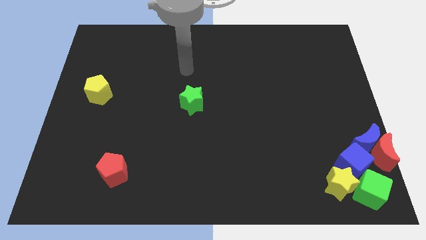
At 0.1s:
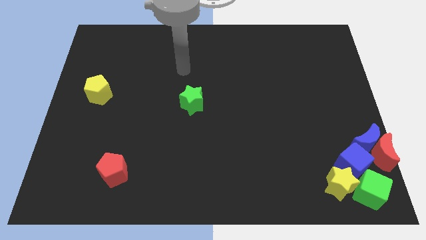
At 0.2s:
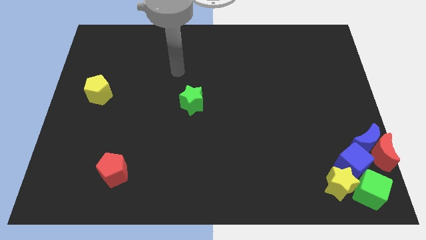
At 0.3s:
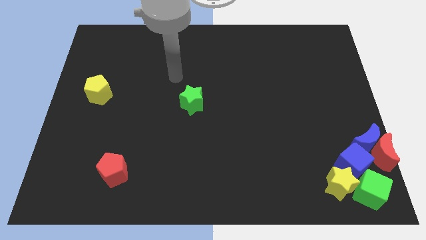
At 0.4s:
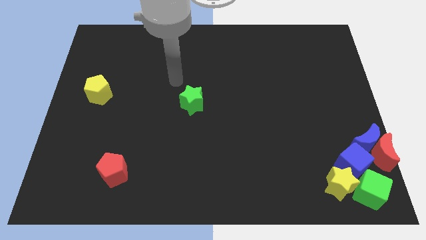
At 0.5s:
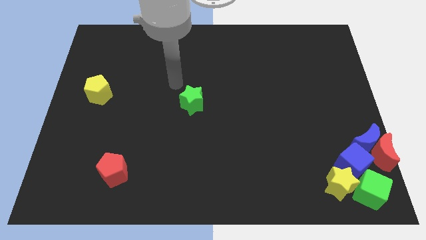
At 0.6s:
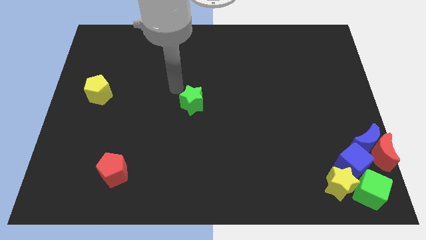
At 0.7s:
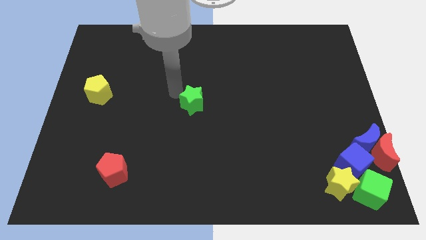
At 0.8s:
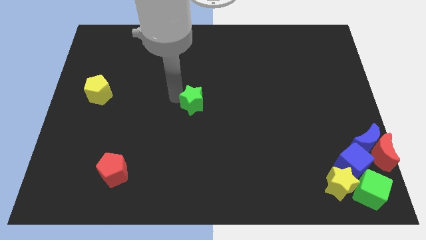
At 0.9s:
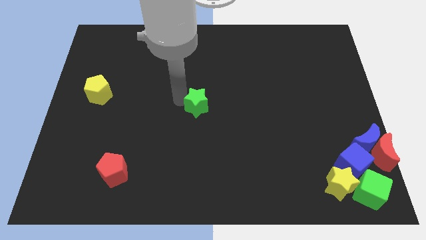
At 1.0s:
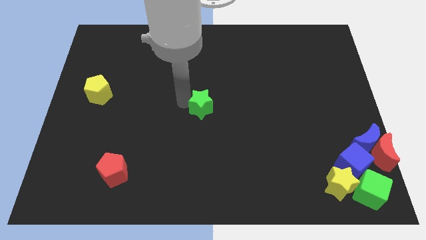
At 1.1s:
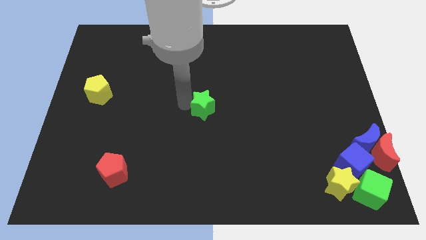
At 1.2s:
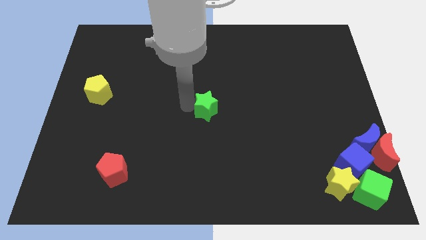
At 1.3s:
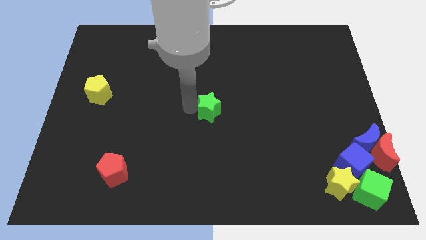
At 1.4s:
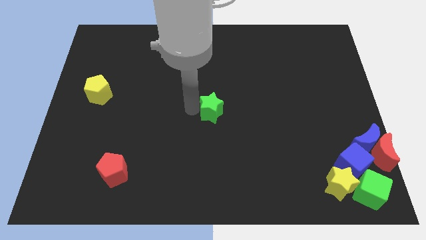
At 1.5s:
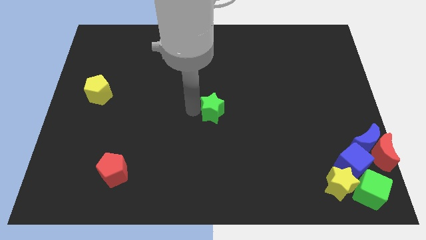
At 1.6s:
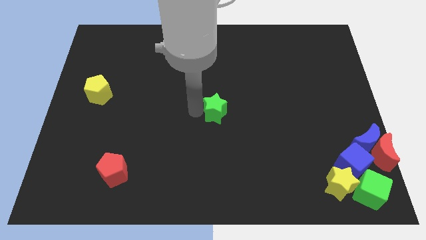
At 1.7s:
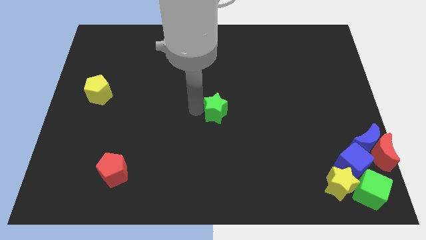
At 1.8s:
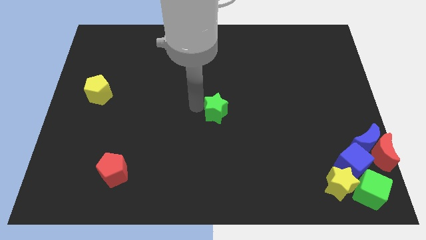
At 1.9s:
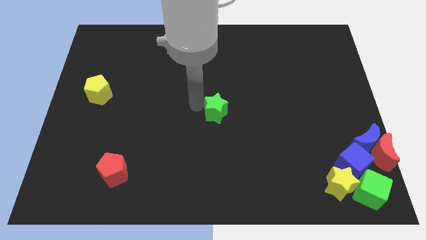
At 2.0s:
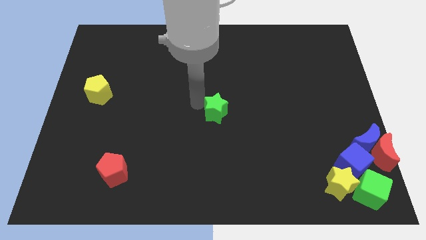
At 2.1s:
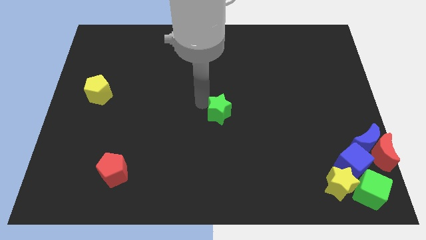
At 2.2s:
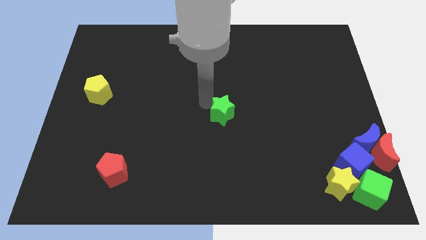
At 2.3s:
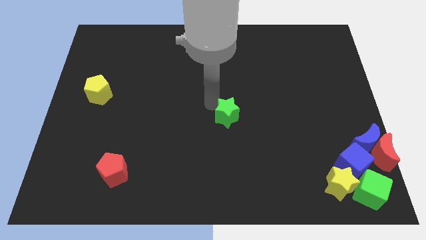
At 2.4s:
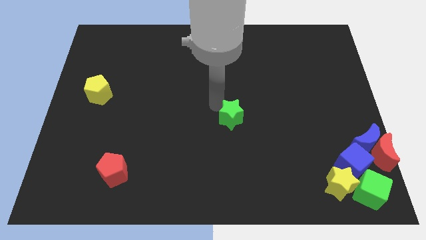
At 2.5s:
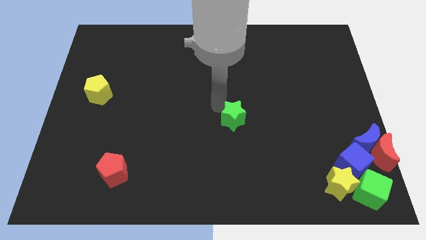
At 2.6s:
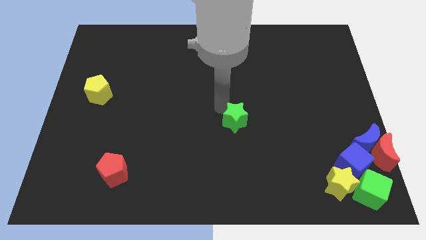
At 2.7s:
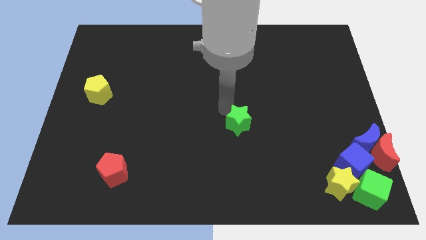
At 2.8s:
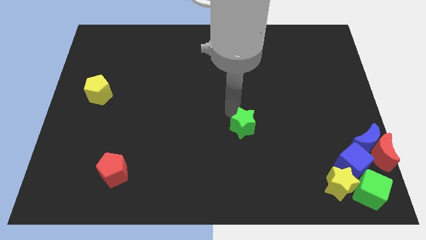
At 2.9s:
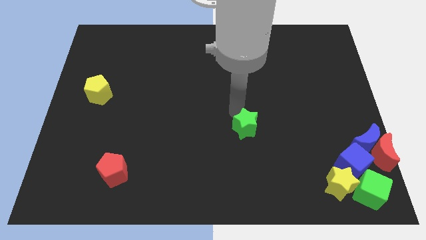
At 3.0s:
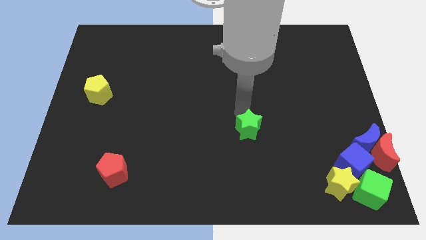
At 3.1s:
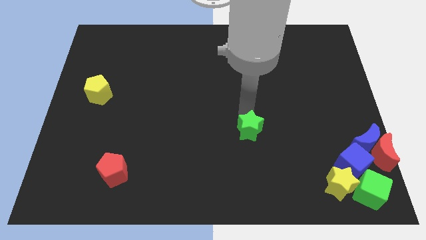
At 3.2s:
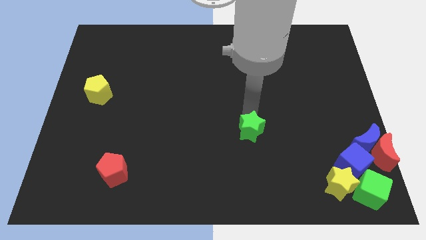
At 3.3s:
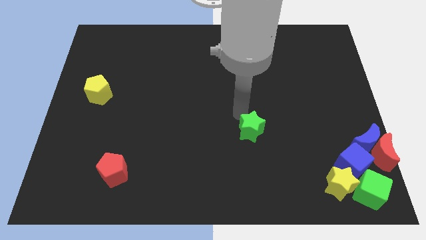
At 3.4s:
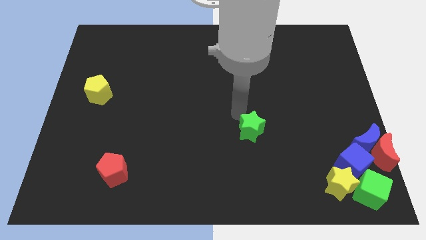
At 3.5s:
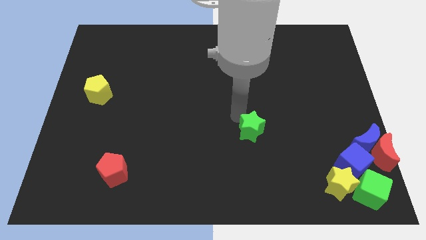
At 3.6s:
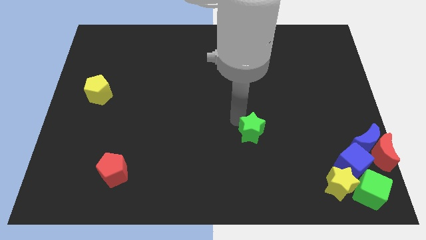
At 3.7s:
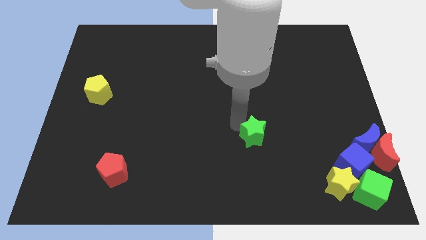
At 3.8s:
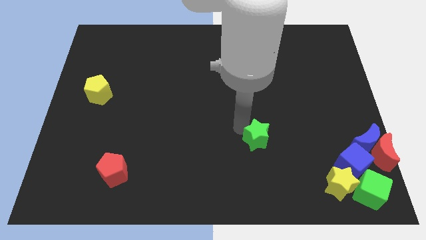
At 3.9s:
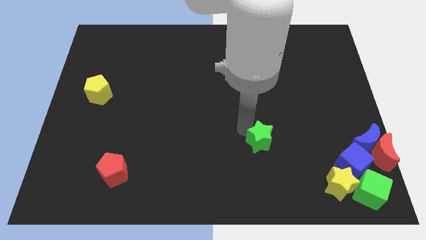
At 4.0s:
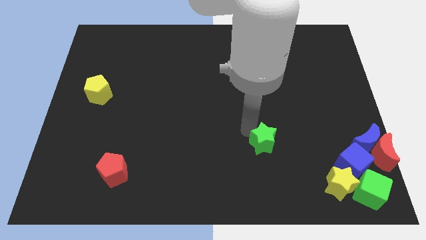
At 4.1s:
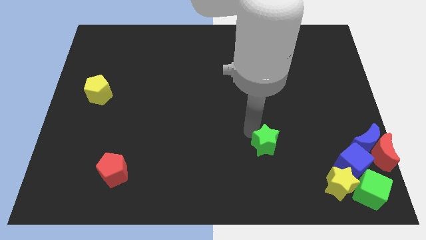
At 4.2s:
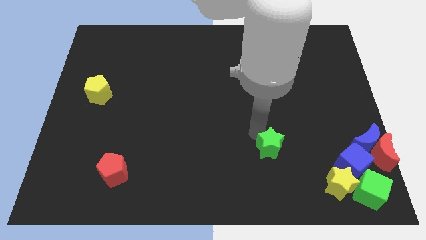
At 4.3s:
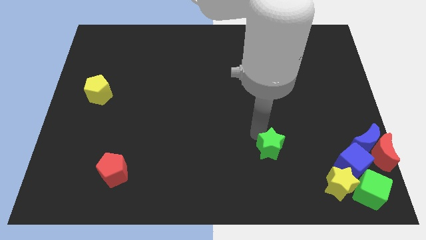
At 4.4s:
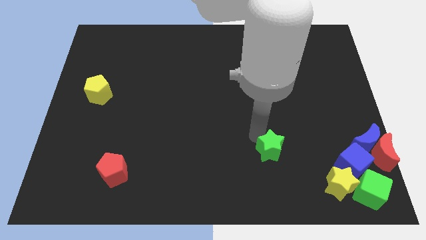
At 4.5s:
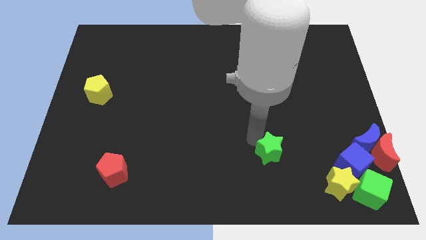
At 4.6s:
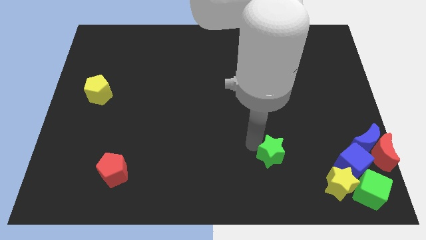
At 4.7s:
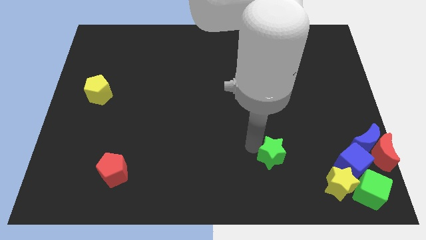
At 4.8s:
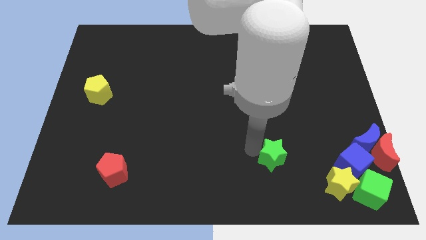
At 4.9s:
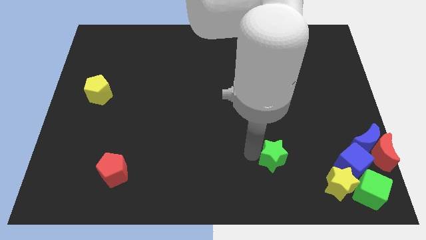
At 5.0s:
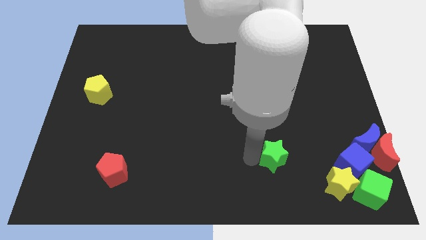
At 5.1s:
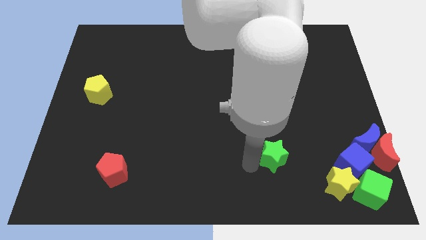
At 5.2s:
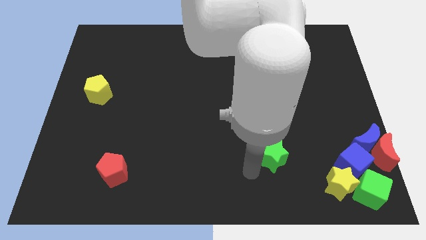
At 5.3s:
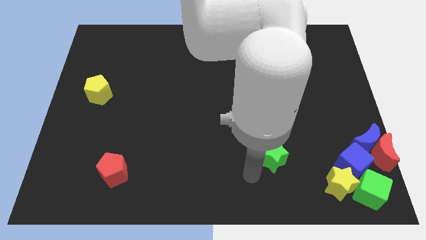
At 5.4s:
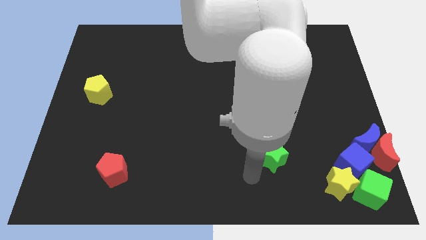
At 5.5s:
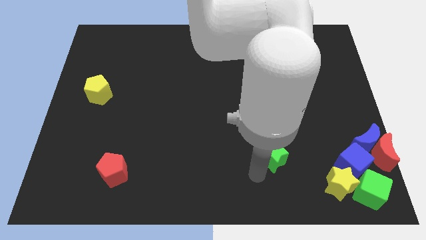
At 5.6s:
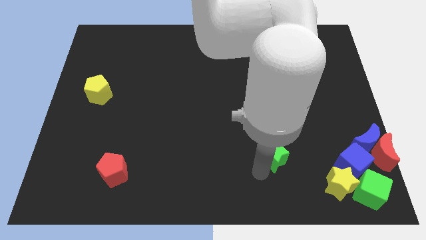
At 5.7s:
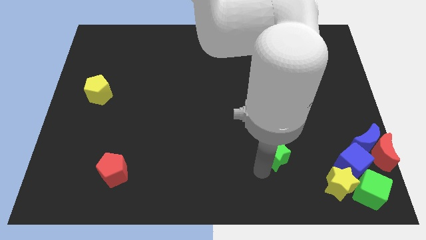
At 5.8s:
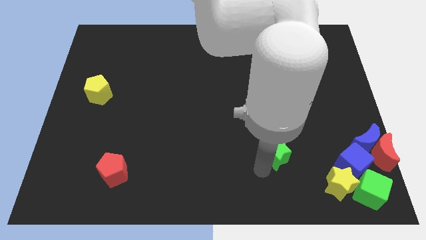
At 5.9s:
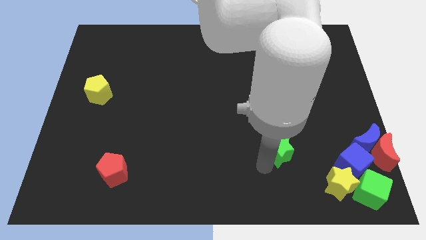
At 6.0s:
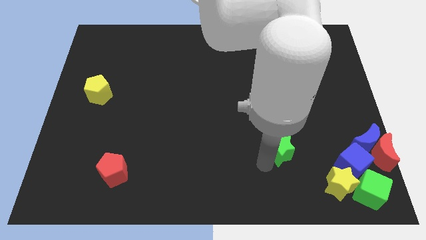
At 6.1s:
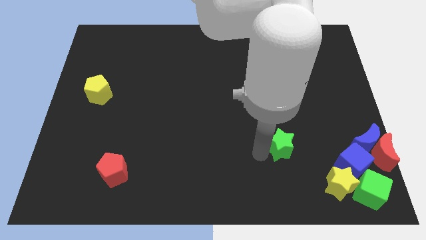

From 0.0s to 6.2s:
push green star to the left of blue cube

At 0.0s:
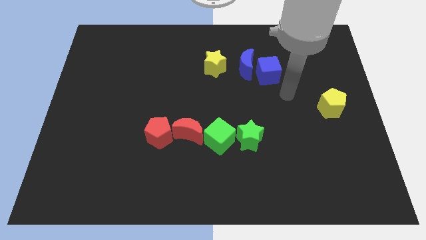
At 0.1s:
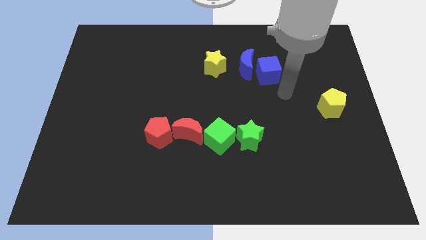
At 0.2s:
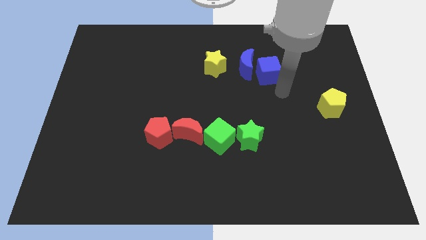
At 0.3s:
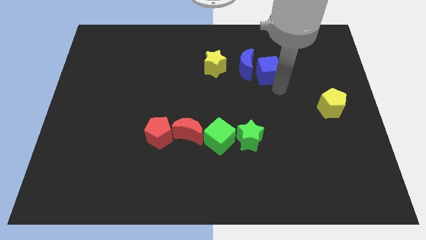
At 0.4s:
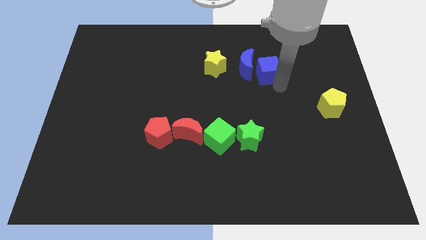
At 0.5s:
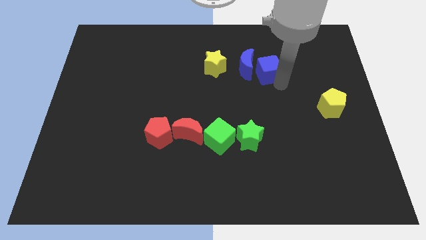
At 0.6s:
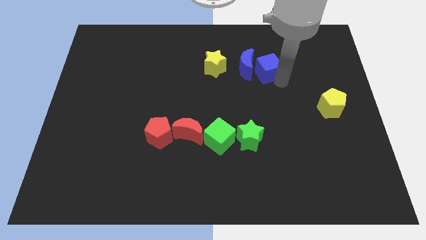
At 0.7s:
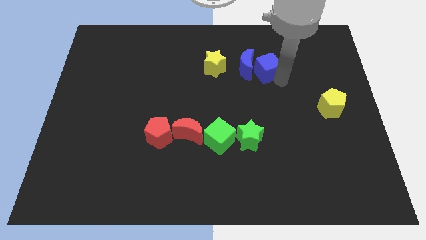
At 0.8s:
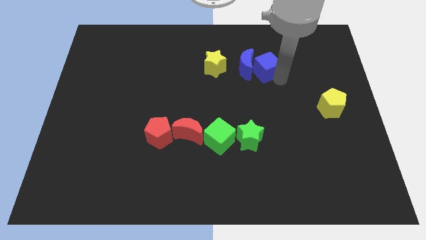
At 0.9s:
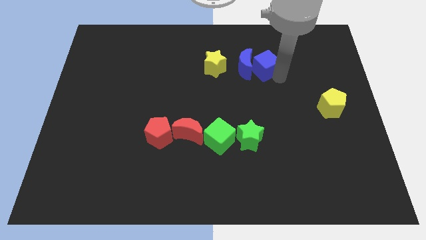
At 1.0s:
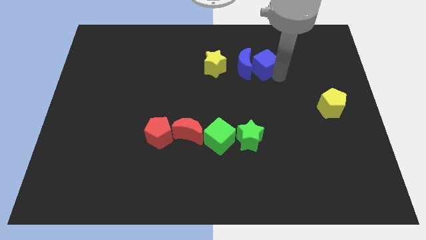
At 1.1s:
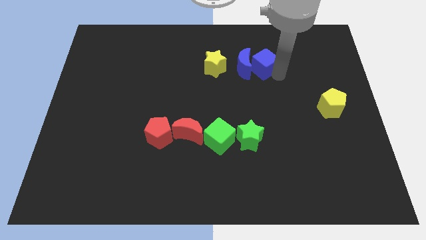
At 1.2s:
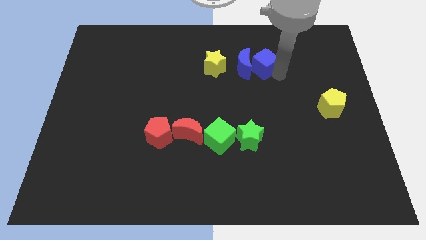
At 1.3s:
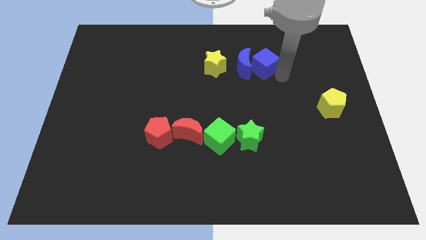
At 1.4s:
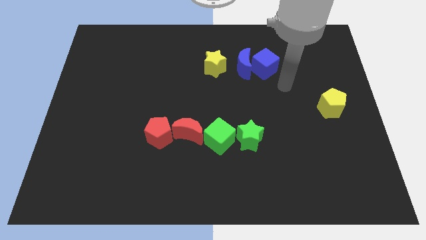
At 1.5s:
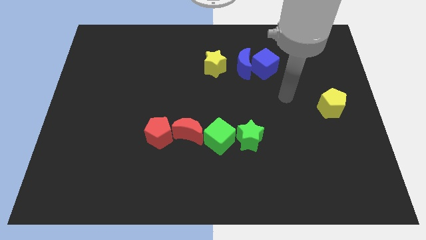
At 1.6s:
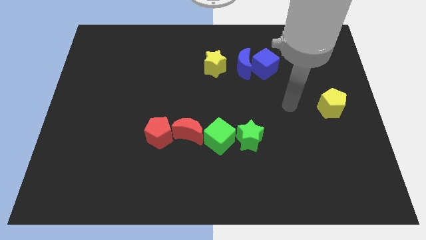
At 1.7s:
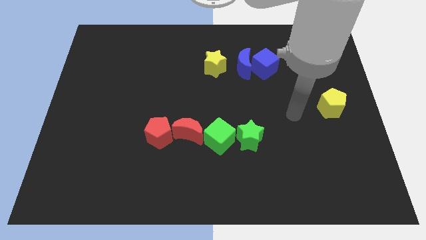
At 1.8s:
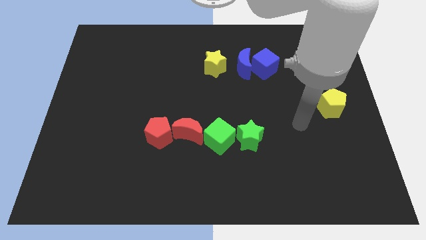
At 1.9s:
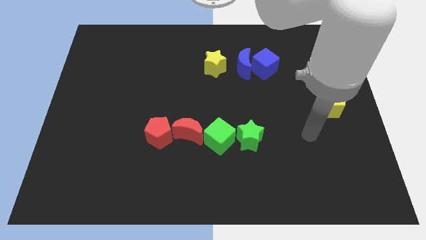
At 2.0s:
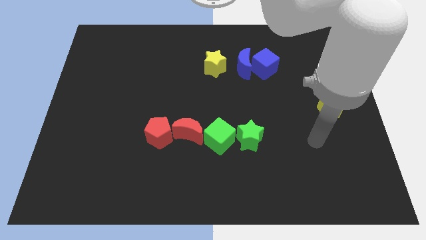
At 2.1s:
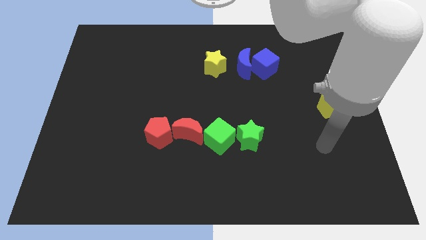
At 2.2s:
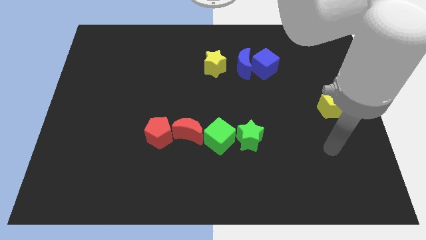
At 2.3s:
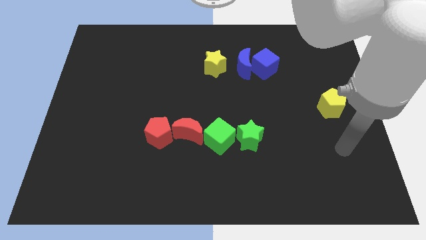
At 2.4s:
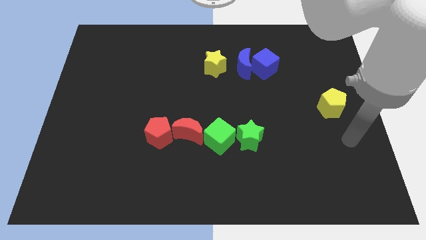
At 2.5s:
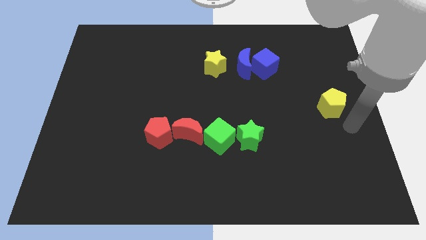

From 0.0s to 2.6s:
push blue cube into blue crecent
